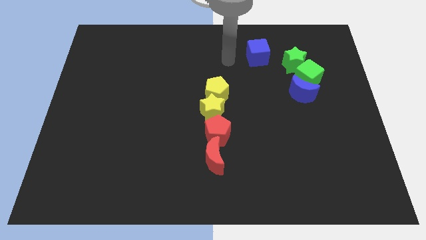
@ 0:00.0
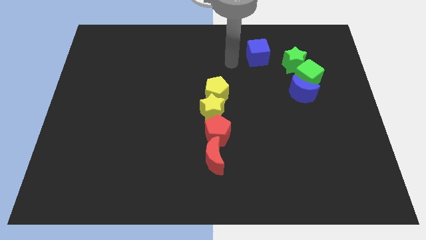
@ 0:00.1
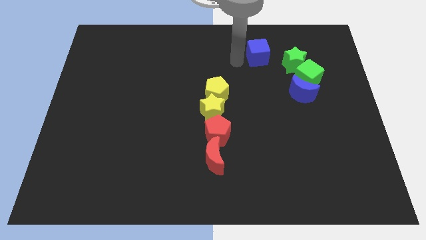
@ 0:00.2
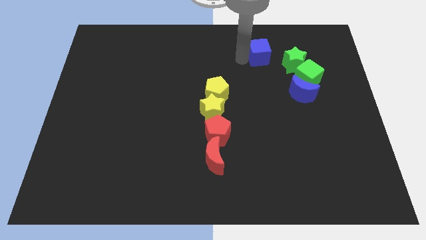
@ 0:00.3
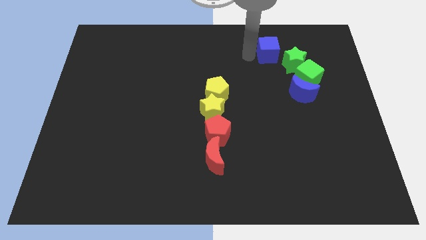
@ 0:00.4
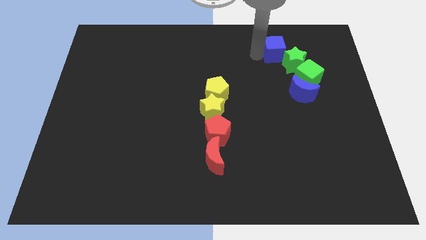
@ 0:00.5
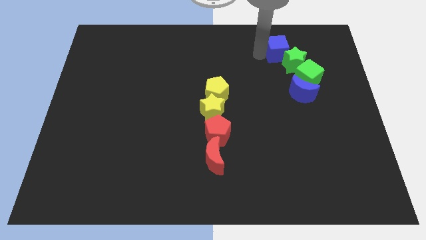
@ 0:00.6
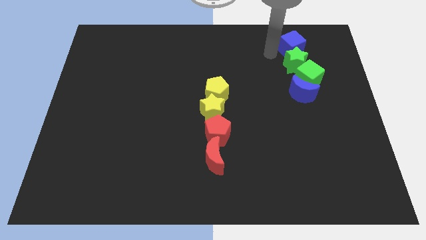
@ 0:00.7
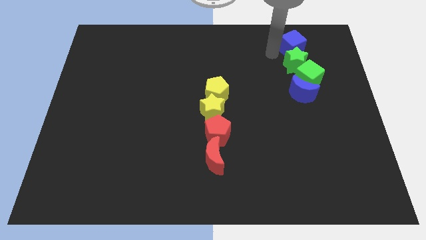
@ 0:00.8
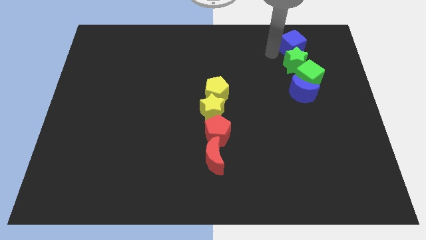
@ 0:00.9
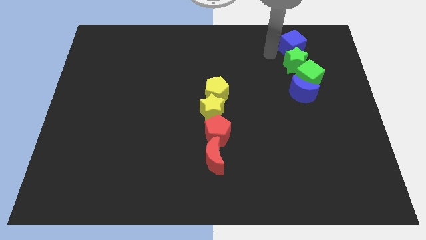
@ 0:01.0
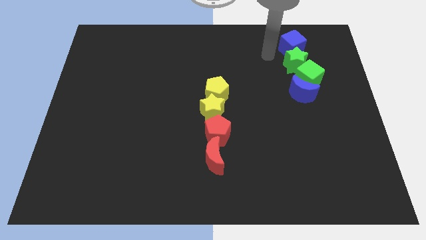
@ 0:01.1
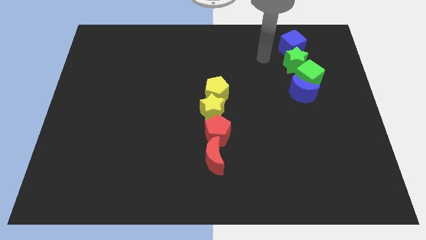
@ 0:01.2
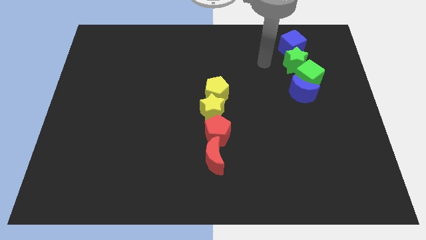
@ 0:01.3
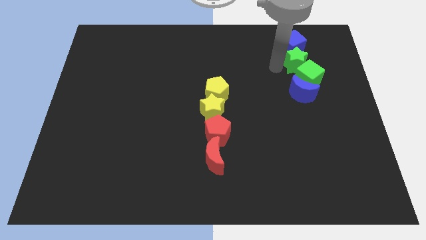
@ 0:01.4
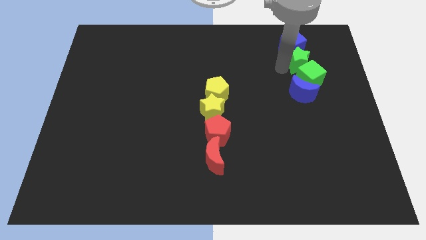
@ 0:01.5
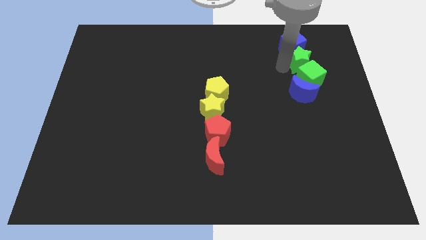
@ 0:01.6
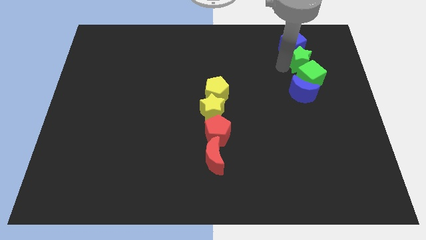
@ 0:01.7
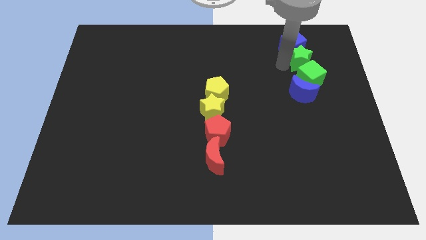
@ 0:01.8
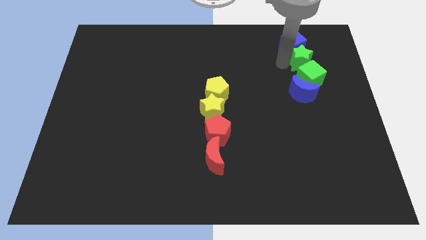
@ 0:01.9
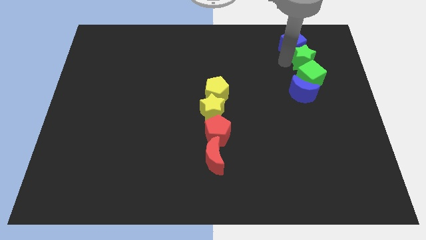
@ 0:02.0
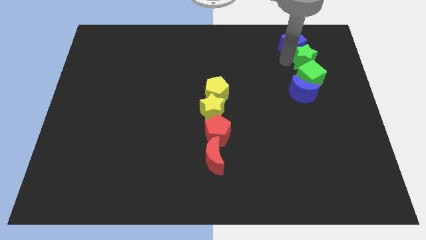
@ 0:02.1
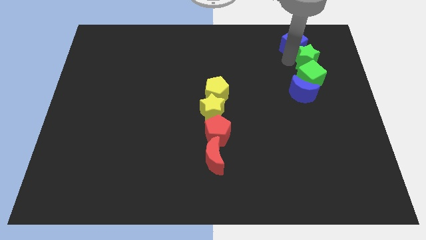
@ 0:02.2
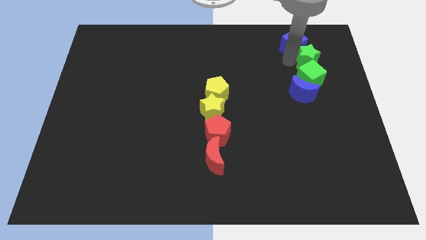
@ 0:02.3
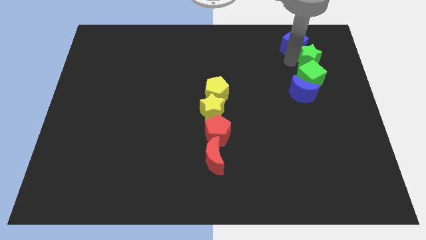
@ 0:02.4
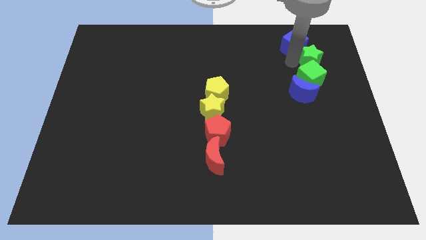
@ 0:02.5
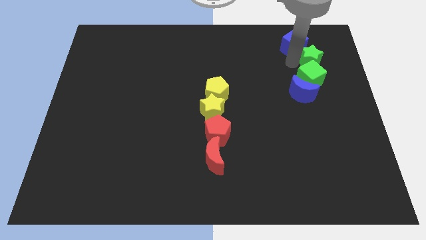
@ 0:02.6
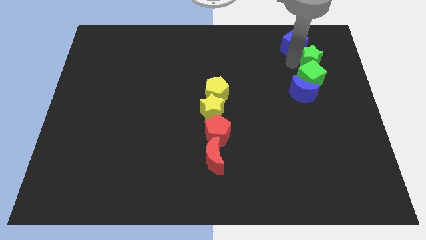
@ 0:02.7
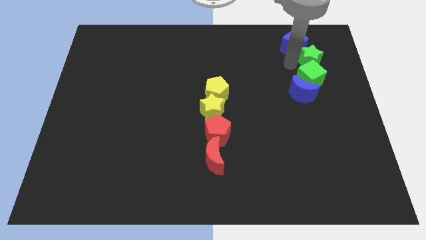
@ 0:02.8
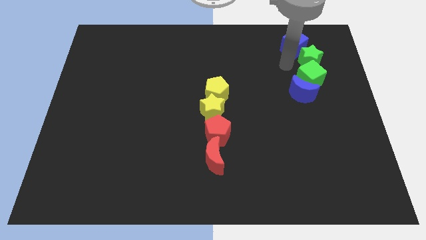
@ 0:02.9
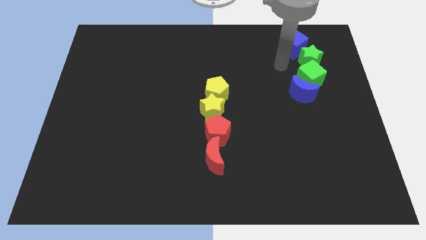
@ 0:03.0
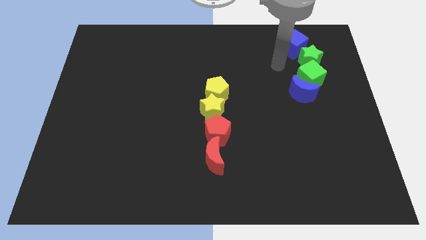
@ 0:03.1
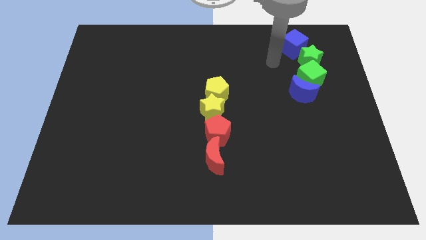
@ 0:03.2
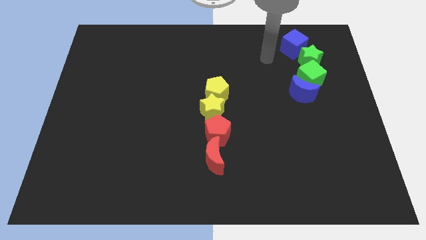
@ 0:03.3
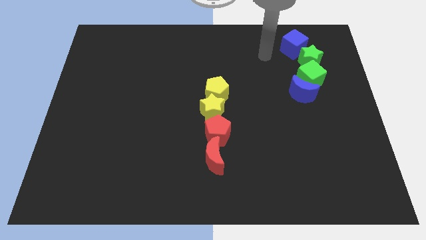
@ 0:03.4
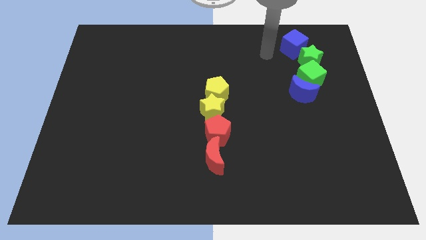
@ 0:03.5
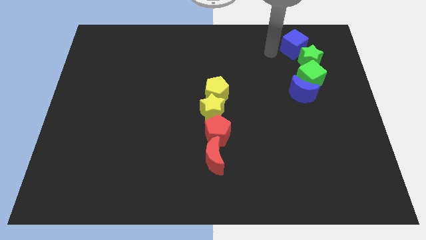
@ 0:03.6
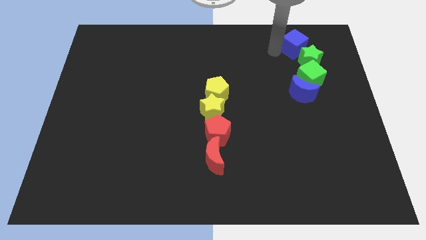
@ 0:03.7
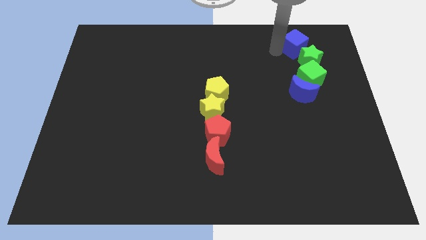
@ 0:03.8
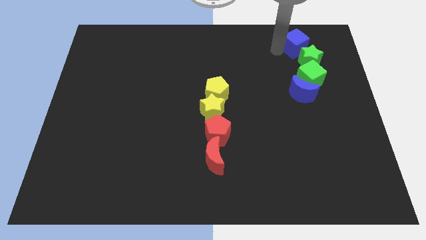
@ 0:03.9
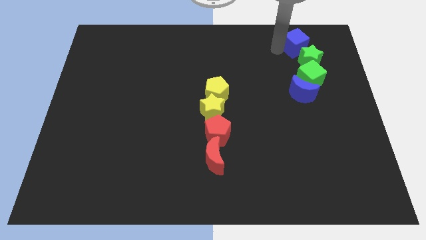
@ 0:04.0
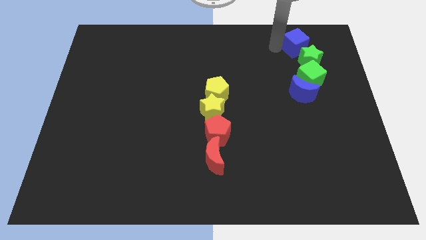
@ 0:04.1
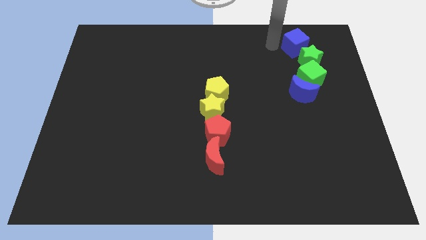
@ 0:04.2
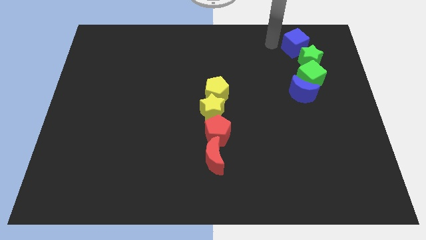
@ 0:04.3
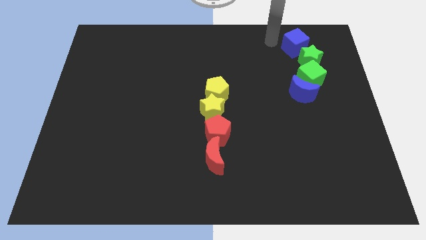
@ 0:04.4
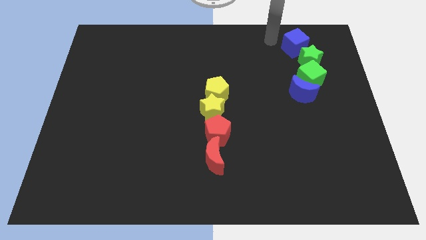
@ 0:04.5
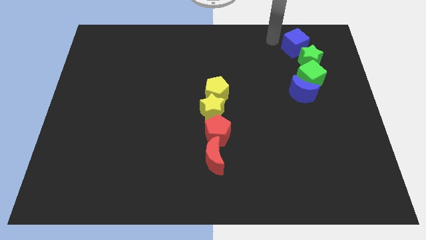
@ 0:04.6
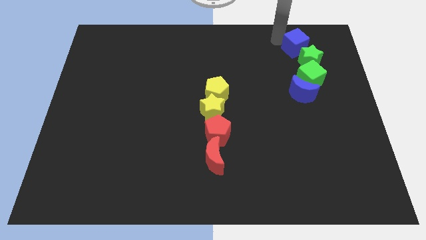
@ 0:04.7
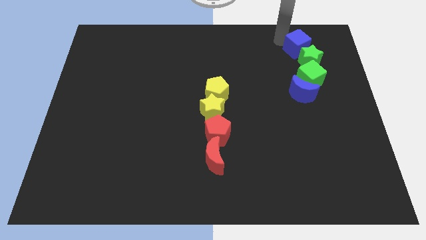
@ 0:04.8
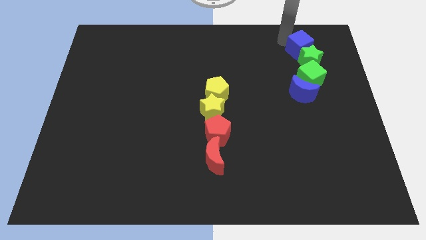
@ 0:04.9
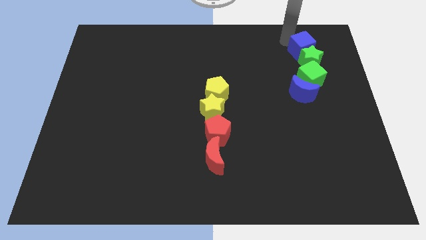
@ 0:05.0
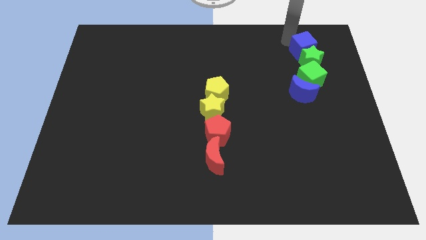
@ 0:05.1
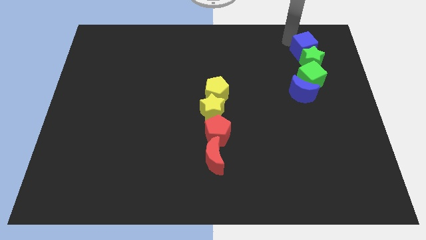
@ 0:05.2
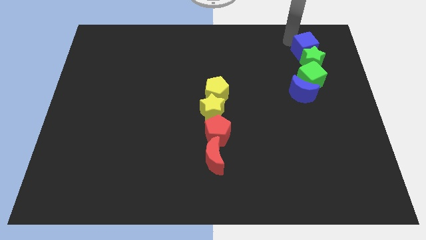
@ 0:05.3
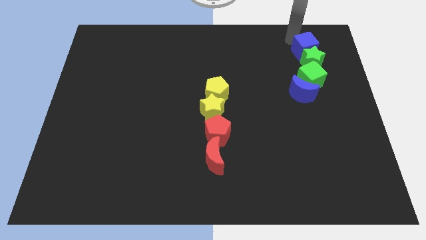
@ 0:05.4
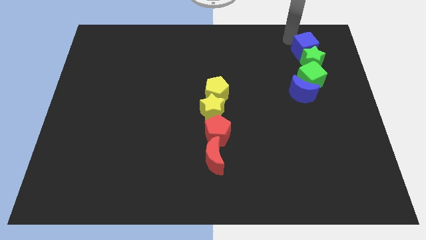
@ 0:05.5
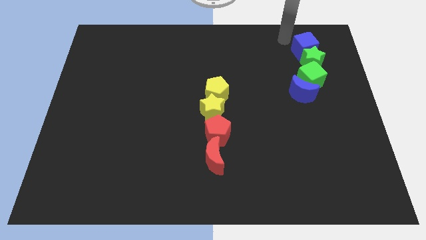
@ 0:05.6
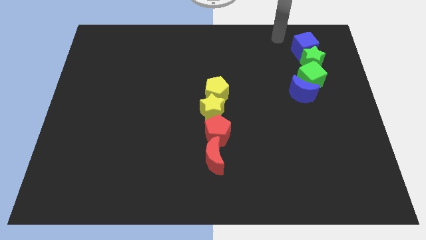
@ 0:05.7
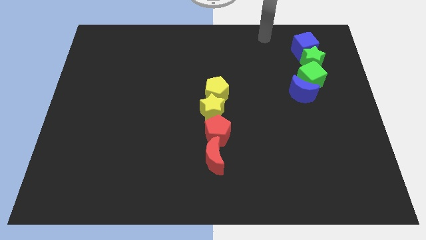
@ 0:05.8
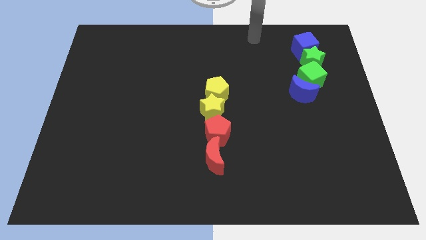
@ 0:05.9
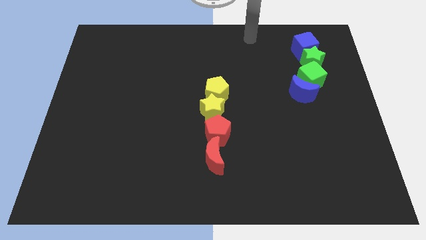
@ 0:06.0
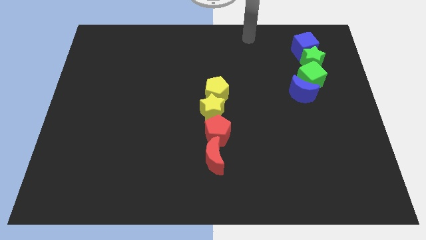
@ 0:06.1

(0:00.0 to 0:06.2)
move the blue cube into the green star on the right top of the board

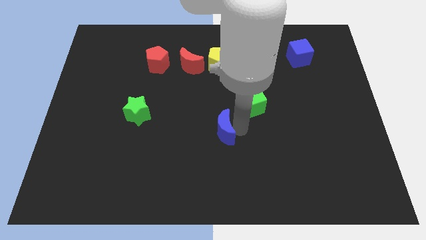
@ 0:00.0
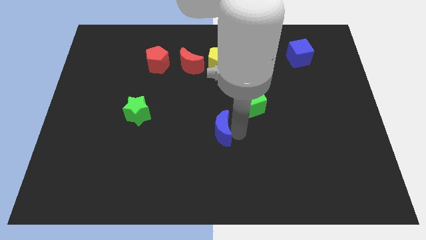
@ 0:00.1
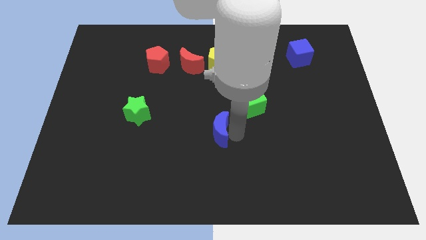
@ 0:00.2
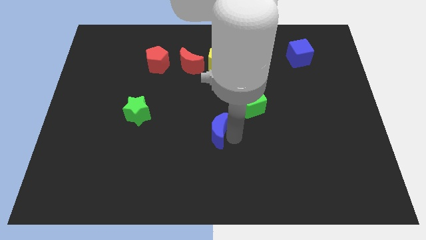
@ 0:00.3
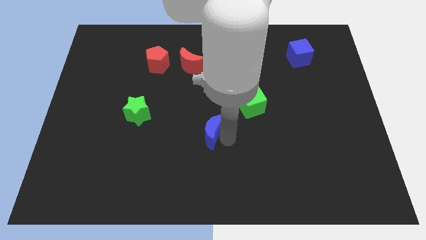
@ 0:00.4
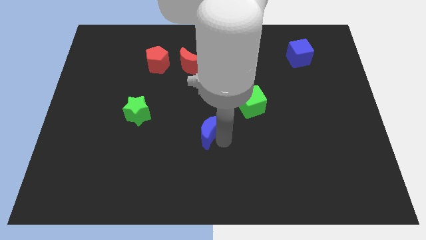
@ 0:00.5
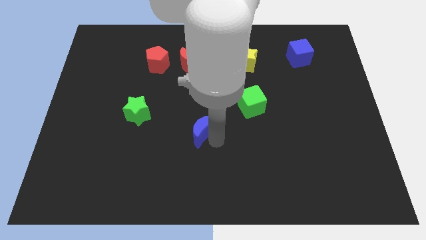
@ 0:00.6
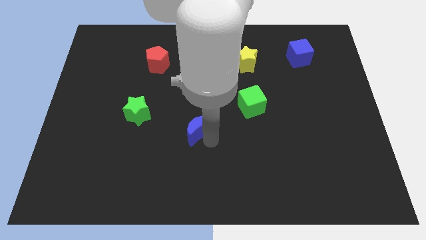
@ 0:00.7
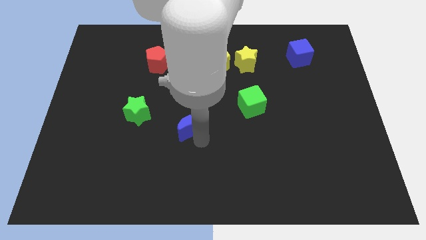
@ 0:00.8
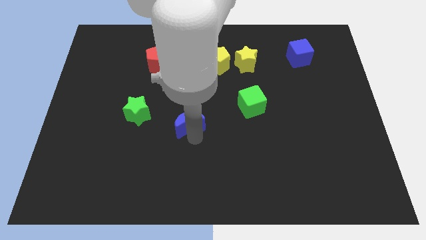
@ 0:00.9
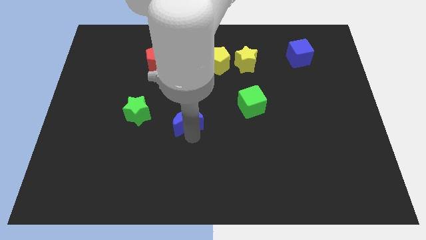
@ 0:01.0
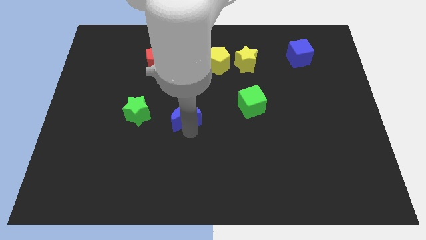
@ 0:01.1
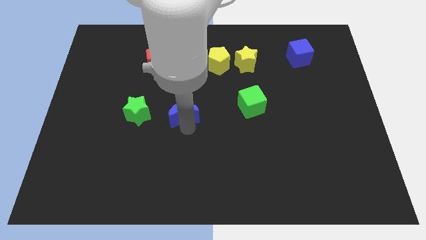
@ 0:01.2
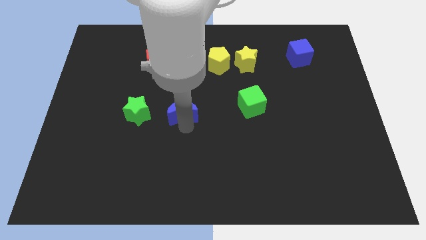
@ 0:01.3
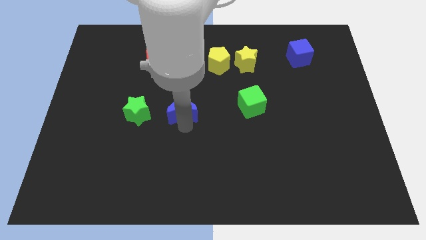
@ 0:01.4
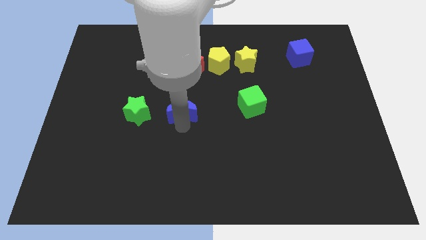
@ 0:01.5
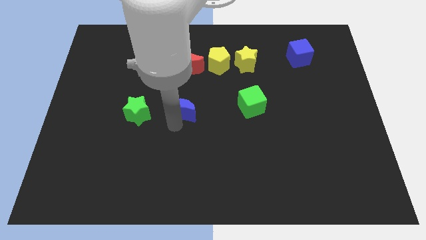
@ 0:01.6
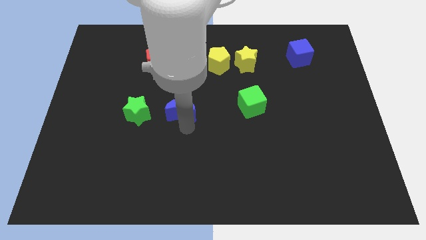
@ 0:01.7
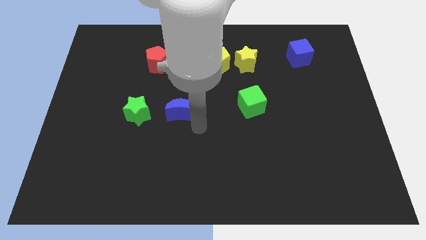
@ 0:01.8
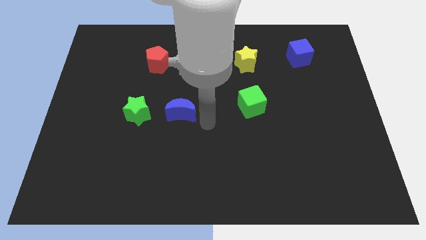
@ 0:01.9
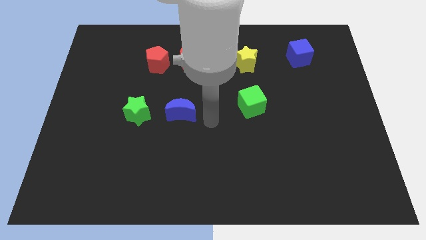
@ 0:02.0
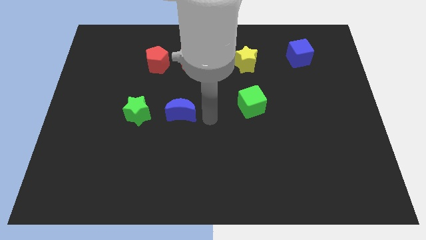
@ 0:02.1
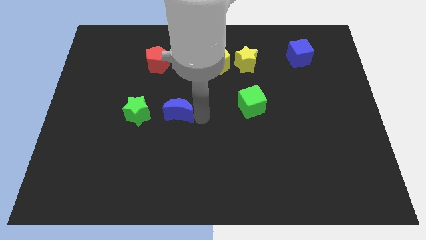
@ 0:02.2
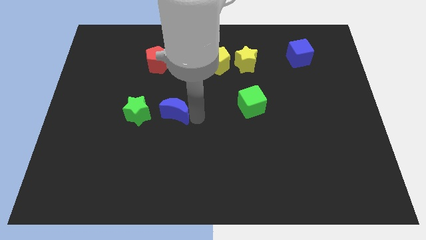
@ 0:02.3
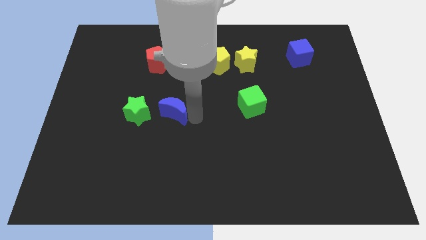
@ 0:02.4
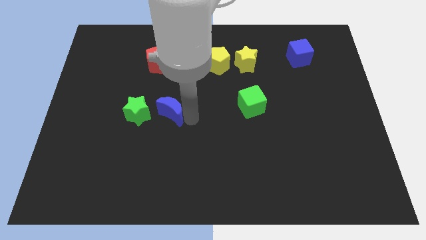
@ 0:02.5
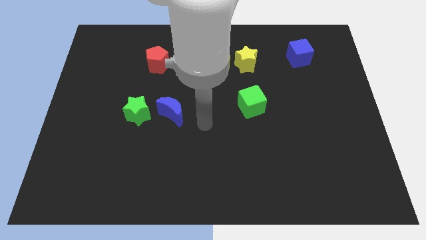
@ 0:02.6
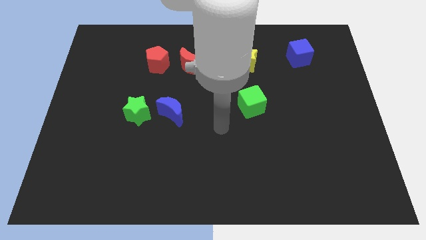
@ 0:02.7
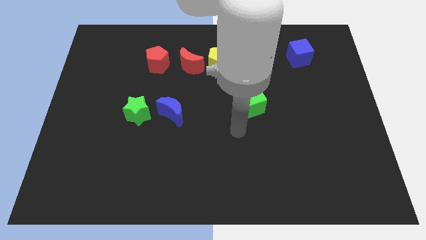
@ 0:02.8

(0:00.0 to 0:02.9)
move the blue moon diagonally bottom right to the red pentagon
